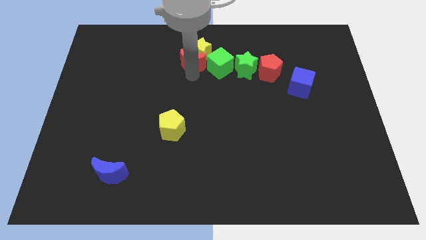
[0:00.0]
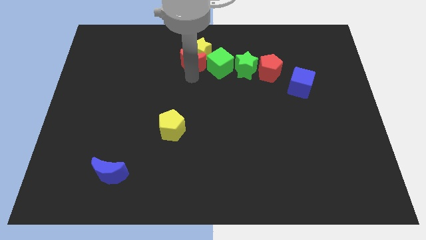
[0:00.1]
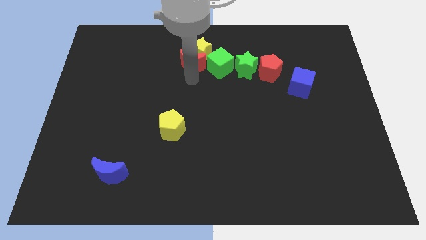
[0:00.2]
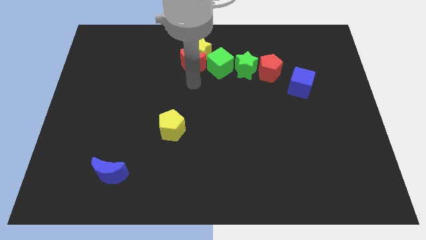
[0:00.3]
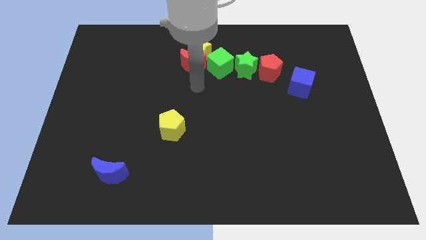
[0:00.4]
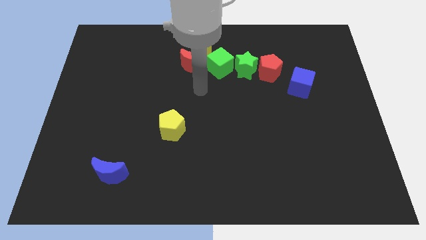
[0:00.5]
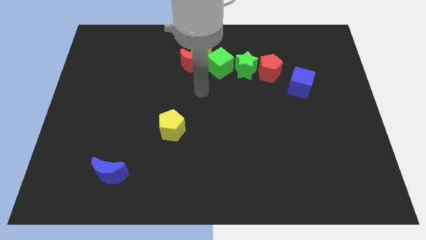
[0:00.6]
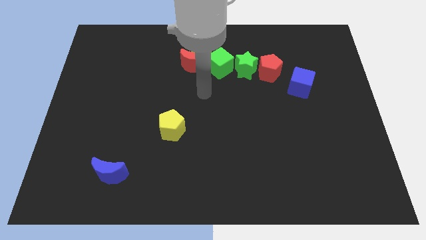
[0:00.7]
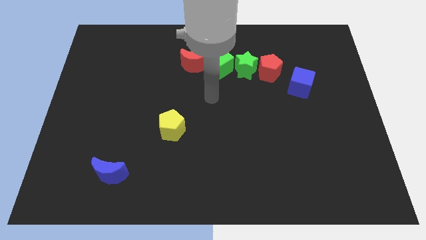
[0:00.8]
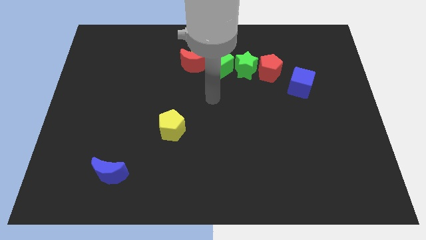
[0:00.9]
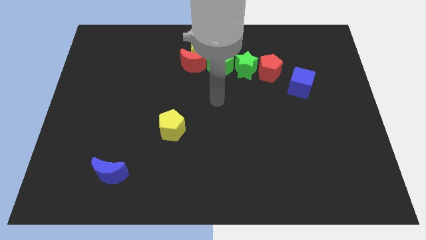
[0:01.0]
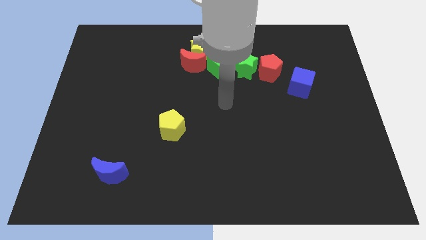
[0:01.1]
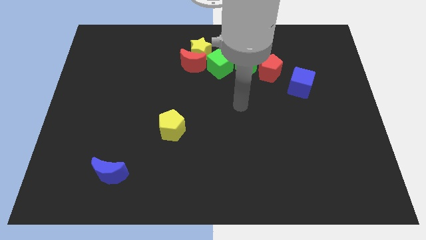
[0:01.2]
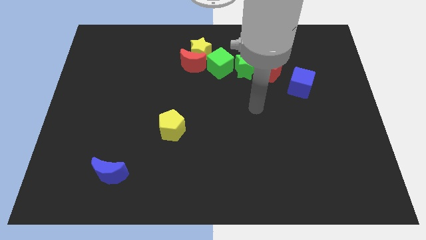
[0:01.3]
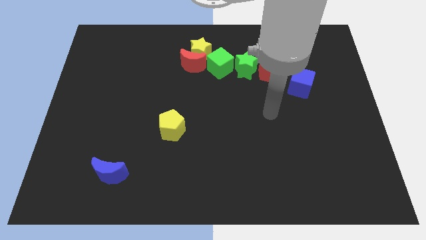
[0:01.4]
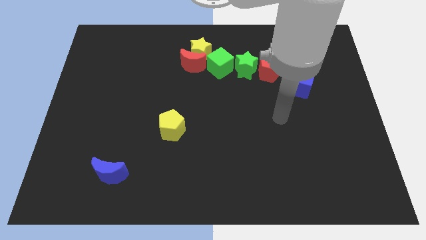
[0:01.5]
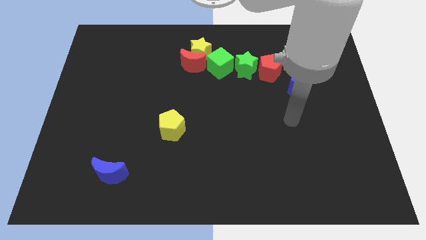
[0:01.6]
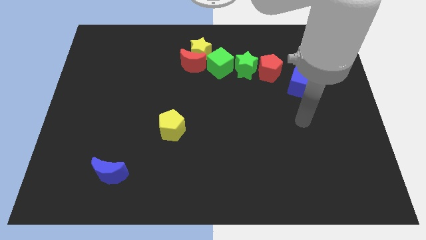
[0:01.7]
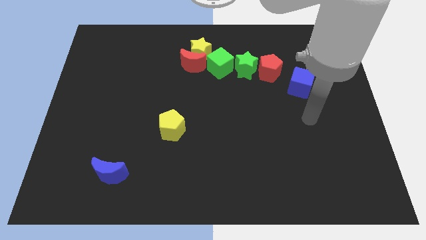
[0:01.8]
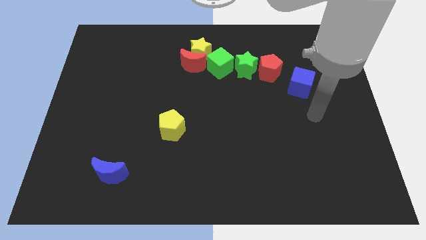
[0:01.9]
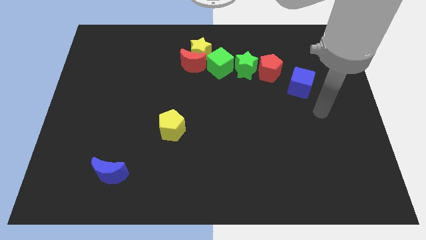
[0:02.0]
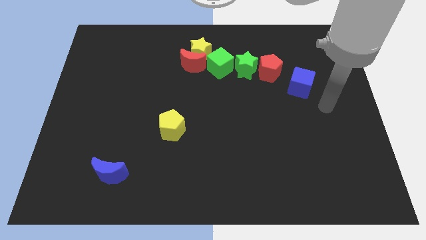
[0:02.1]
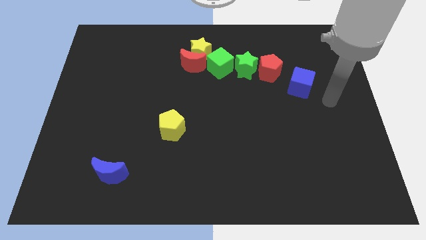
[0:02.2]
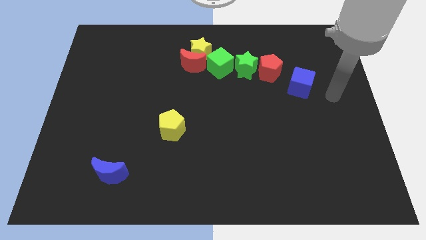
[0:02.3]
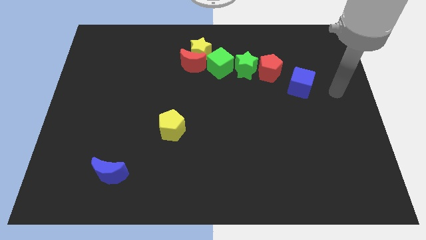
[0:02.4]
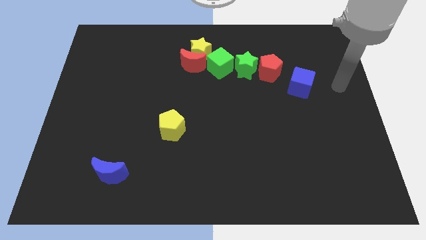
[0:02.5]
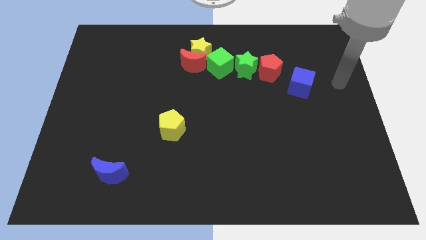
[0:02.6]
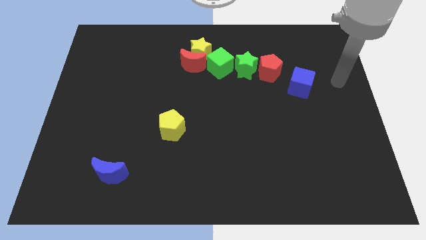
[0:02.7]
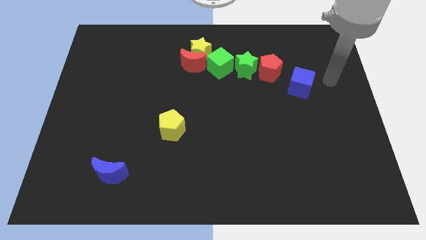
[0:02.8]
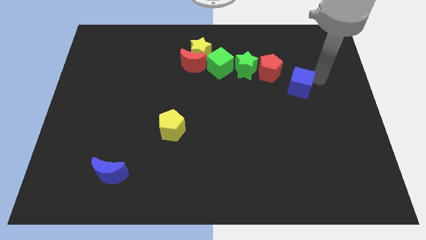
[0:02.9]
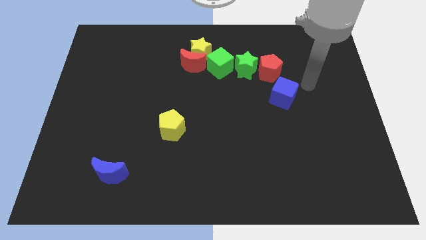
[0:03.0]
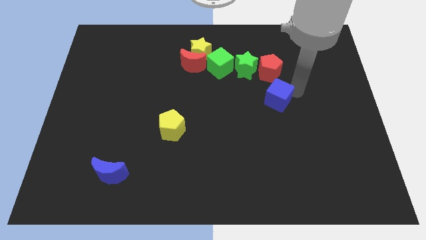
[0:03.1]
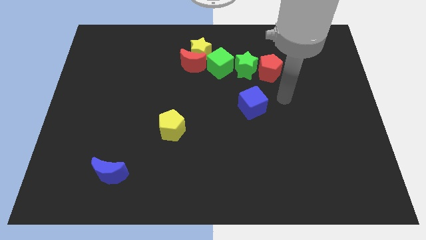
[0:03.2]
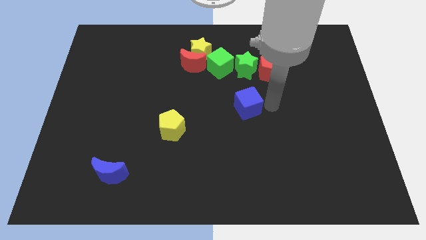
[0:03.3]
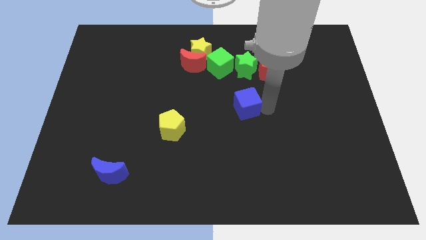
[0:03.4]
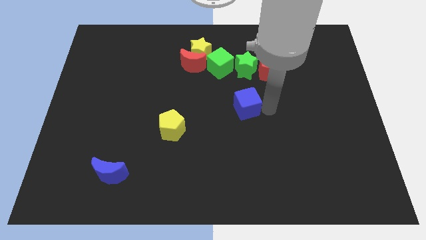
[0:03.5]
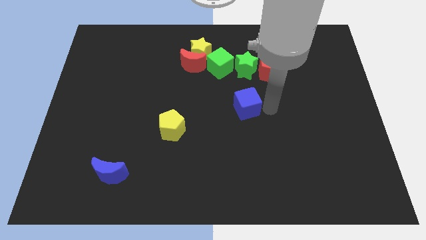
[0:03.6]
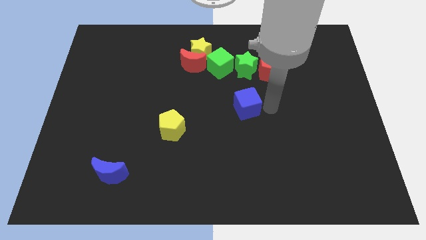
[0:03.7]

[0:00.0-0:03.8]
push the blue cube below the green star

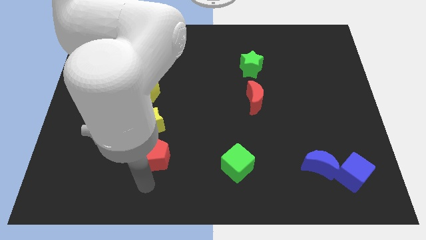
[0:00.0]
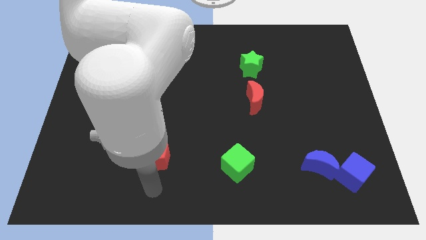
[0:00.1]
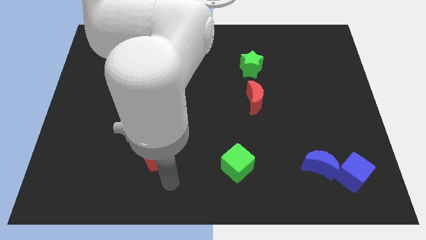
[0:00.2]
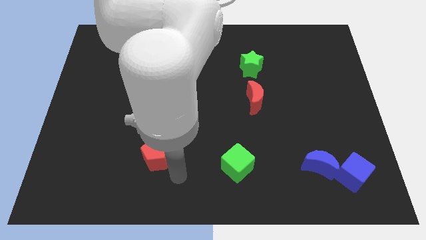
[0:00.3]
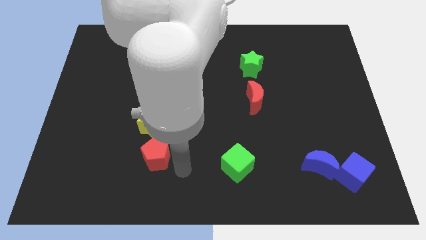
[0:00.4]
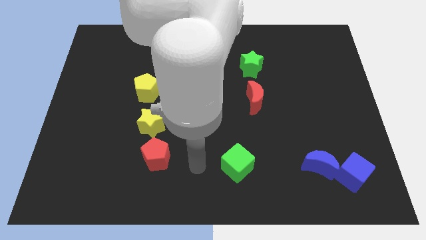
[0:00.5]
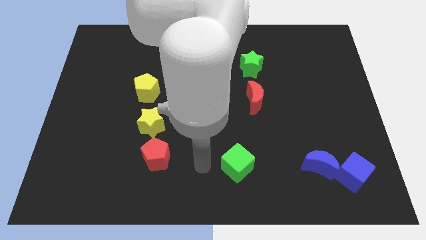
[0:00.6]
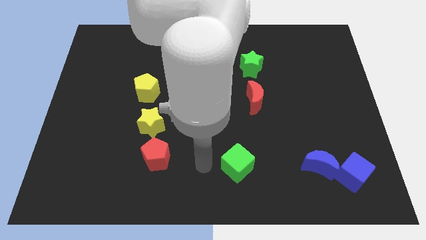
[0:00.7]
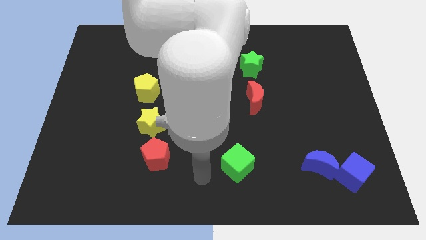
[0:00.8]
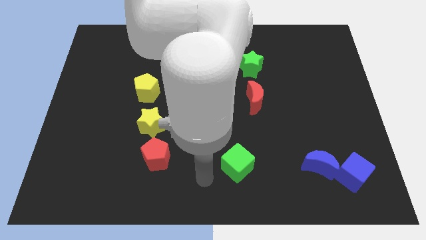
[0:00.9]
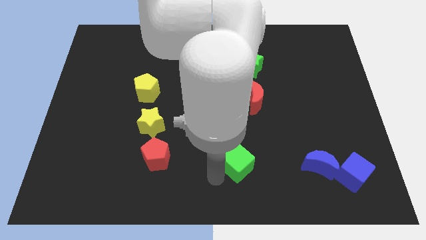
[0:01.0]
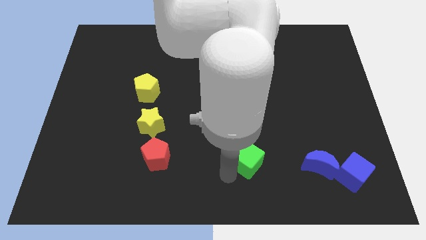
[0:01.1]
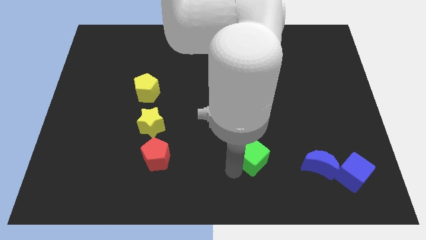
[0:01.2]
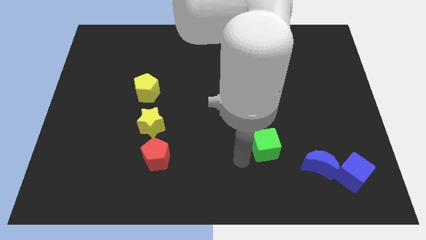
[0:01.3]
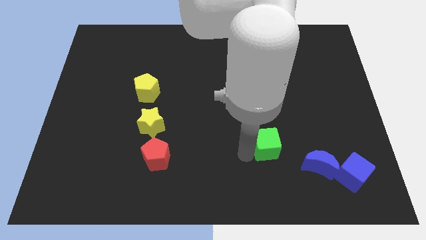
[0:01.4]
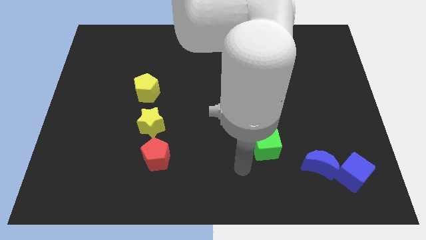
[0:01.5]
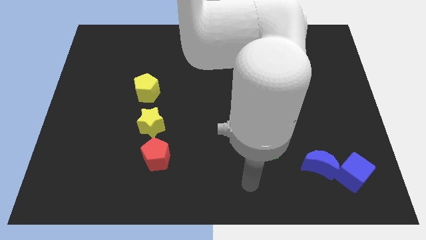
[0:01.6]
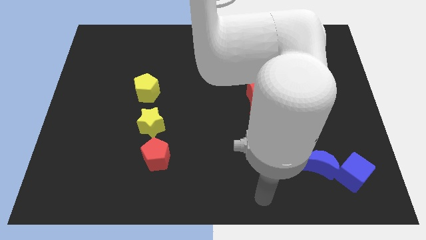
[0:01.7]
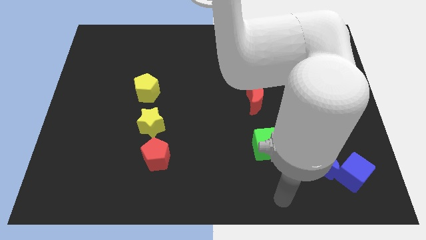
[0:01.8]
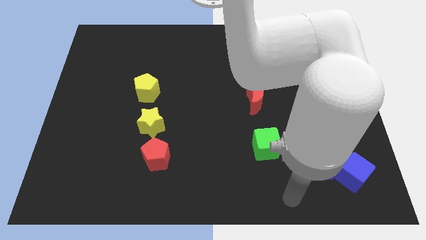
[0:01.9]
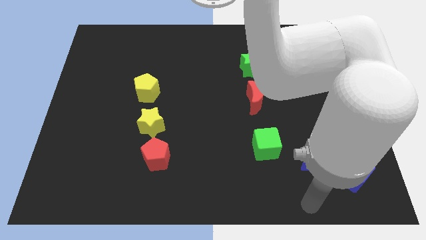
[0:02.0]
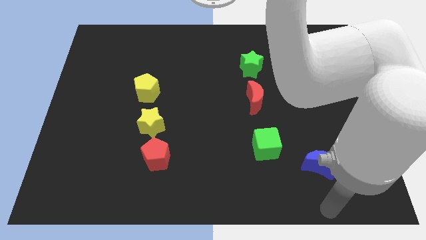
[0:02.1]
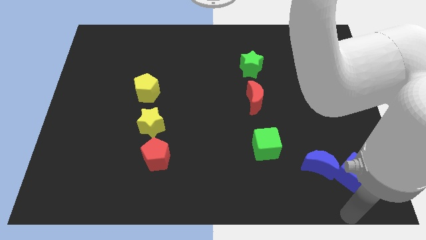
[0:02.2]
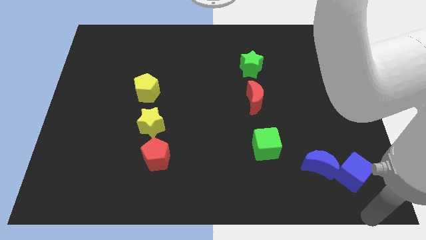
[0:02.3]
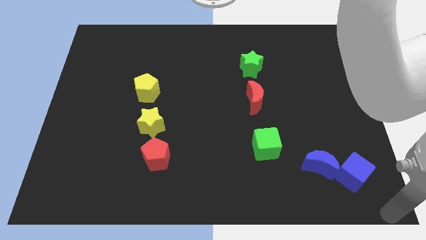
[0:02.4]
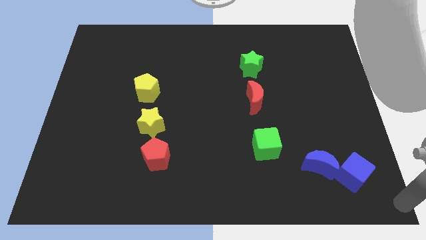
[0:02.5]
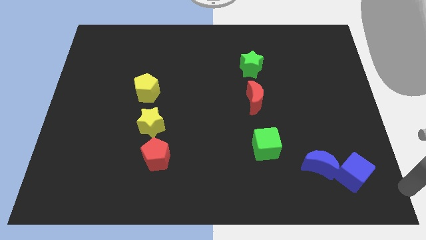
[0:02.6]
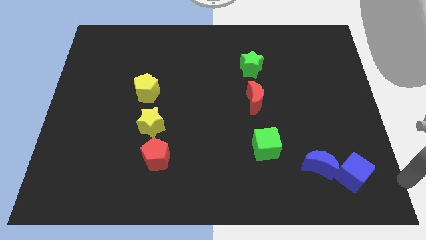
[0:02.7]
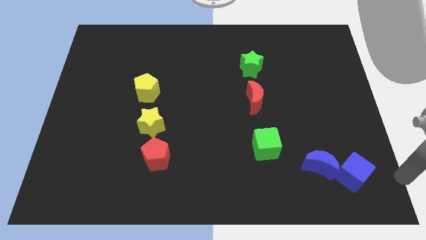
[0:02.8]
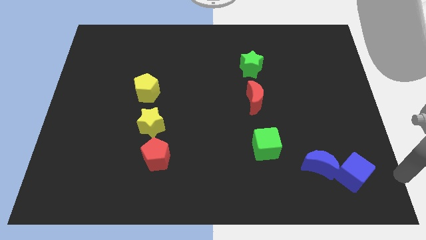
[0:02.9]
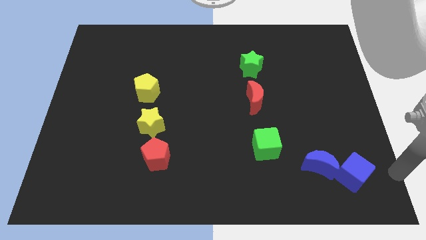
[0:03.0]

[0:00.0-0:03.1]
move green cube towards center right

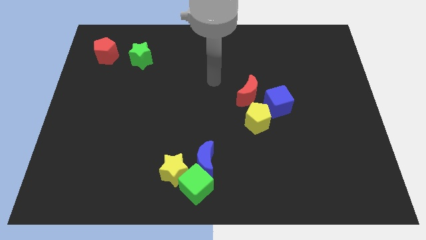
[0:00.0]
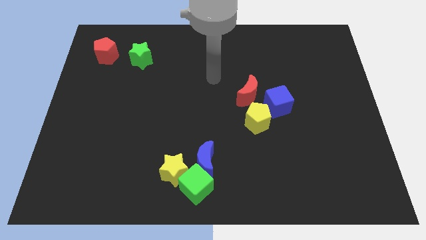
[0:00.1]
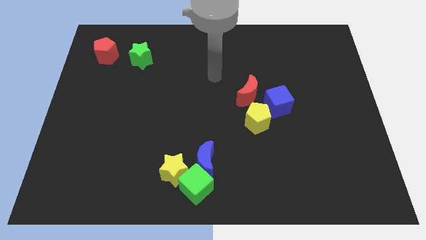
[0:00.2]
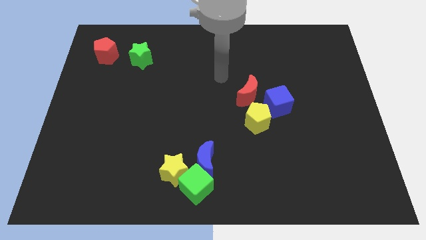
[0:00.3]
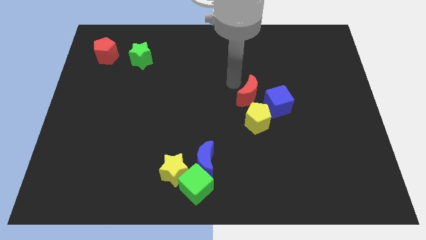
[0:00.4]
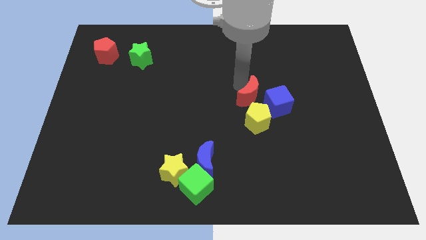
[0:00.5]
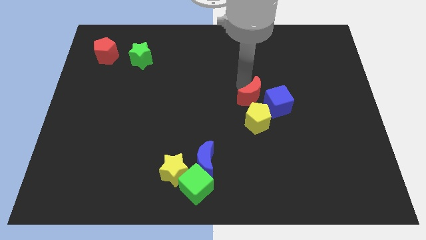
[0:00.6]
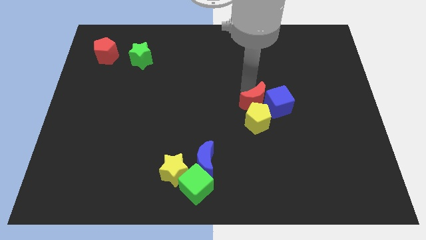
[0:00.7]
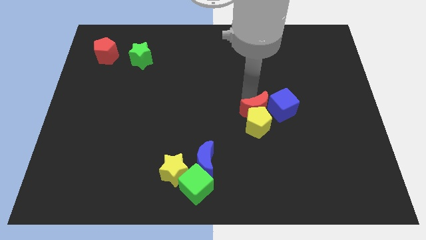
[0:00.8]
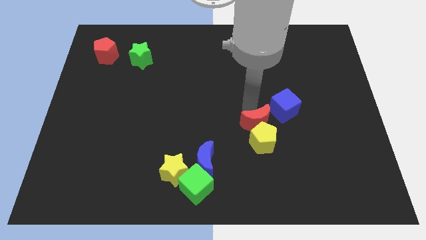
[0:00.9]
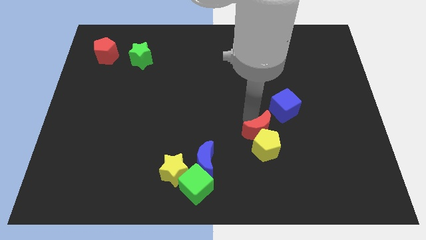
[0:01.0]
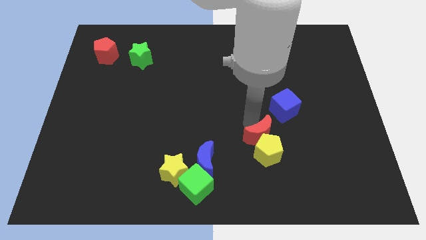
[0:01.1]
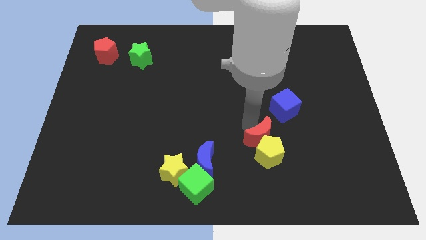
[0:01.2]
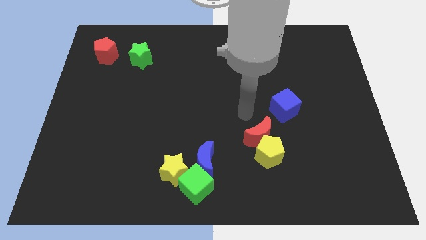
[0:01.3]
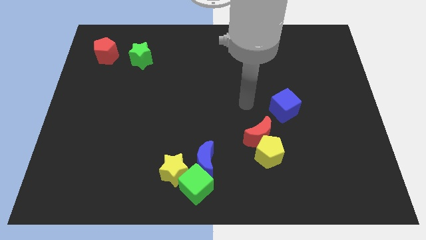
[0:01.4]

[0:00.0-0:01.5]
push red crescent into yellow pentagon

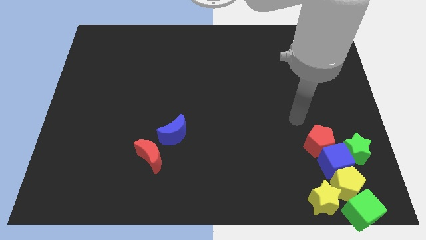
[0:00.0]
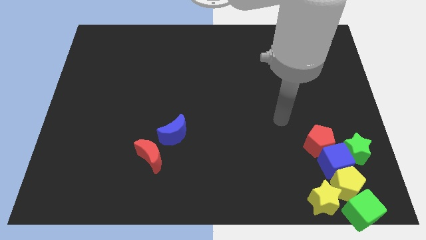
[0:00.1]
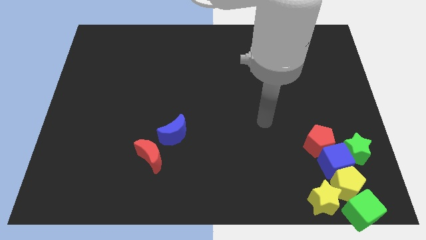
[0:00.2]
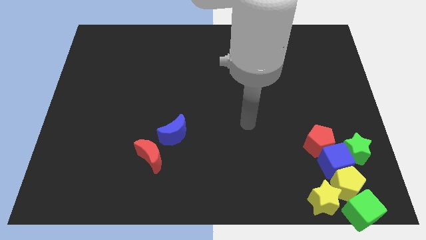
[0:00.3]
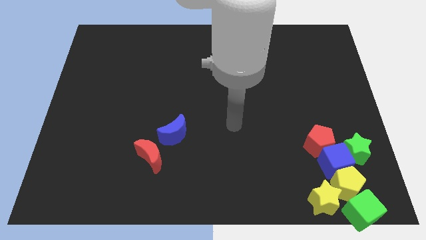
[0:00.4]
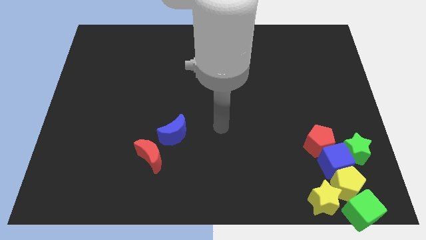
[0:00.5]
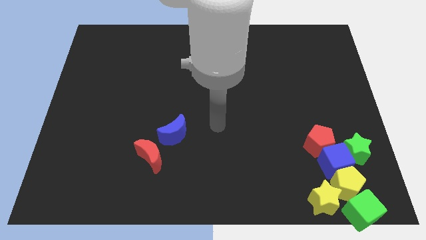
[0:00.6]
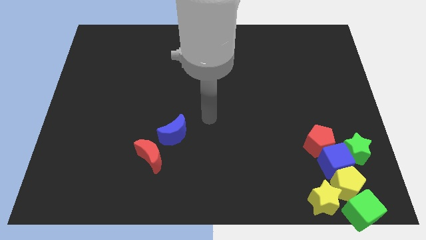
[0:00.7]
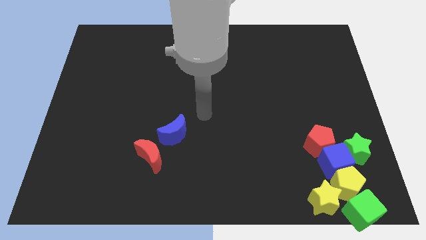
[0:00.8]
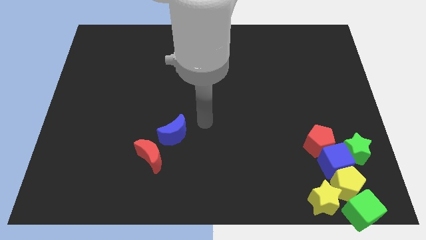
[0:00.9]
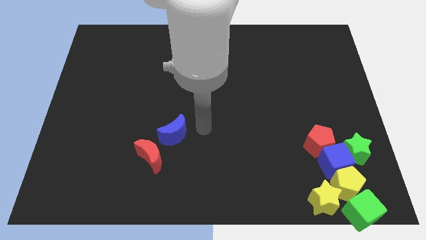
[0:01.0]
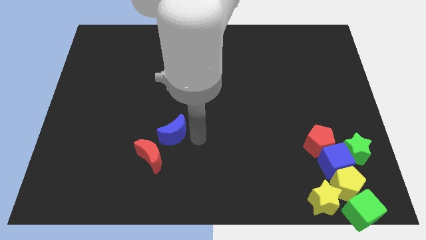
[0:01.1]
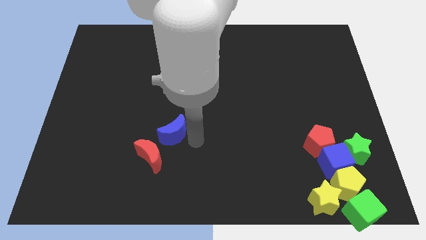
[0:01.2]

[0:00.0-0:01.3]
point your arm at the right of the blue crescent
